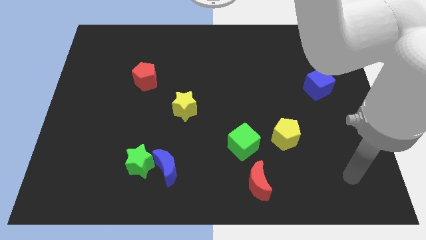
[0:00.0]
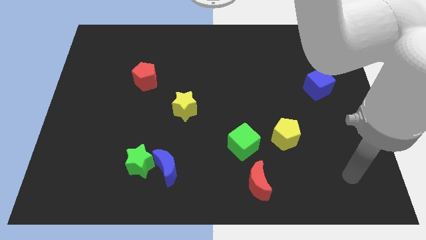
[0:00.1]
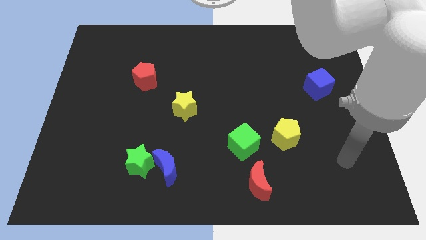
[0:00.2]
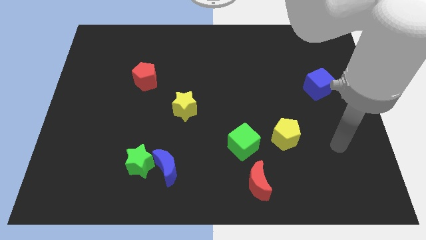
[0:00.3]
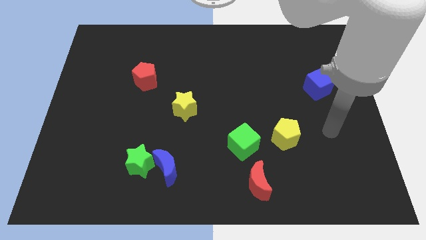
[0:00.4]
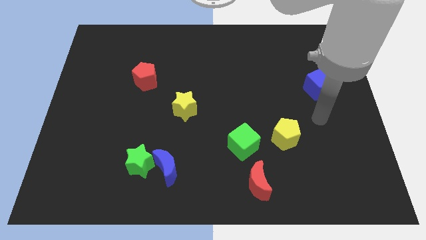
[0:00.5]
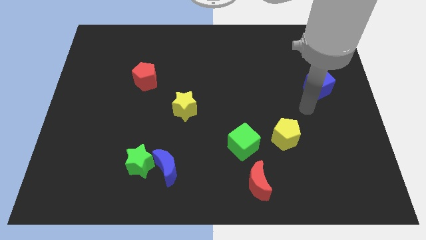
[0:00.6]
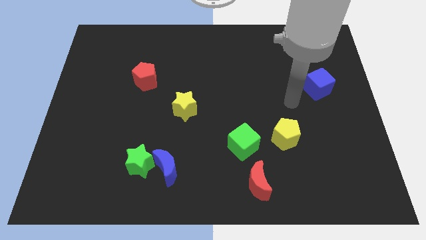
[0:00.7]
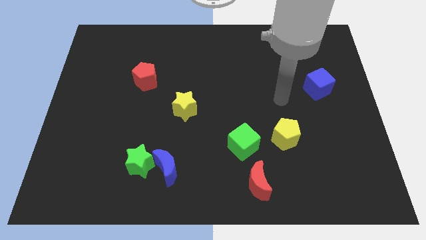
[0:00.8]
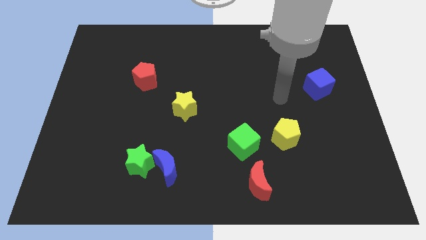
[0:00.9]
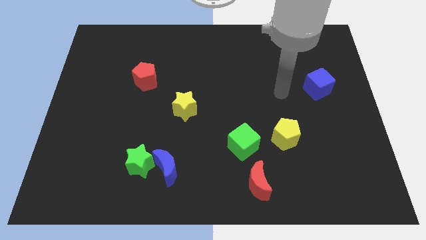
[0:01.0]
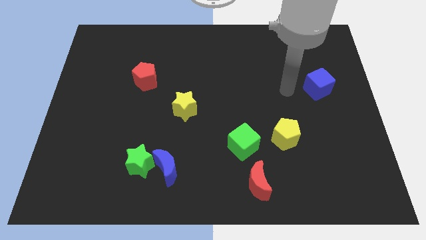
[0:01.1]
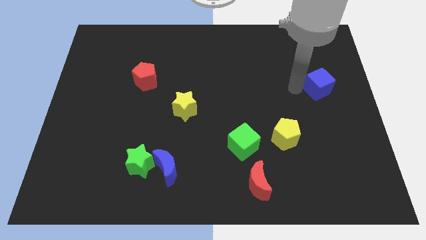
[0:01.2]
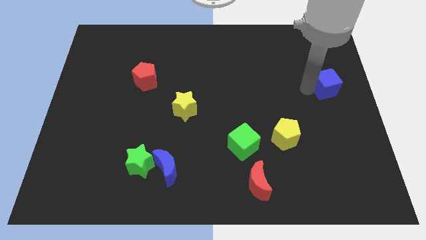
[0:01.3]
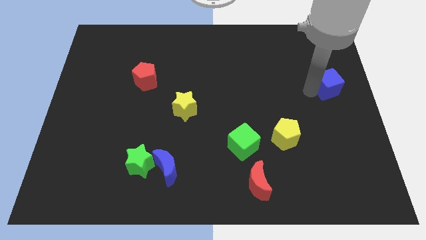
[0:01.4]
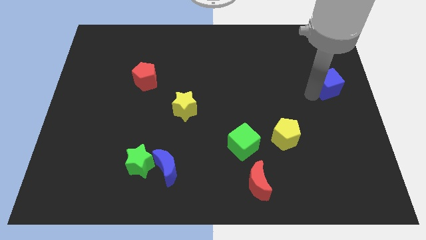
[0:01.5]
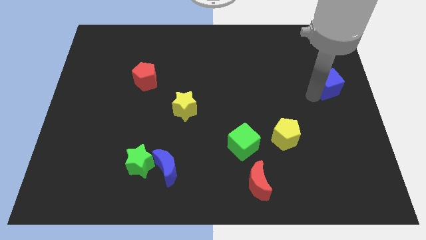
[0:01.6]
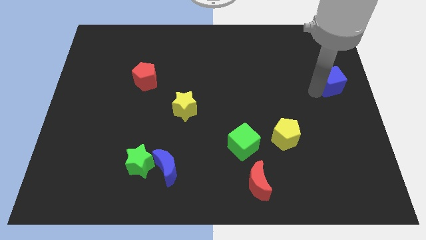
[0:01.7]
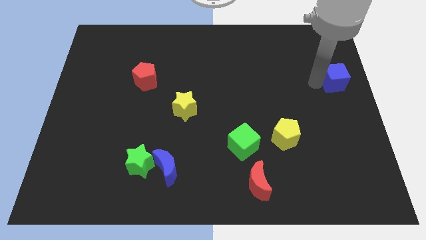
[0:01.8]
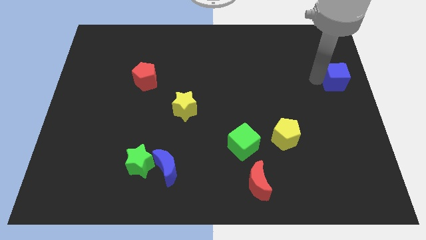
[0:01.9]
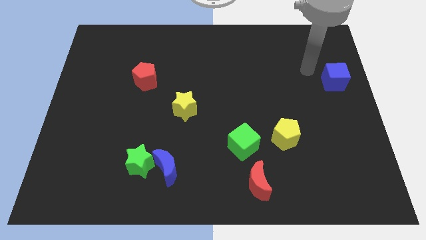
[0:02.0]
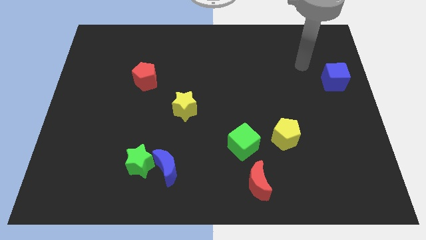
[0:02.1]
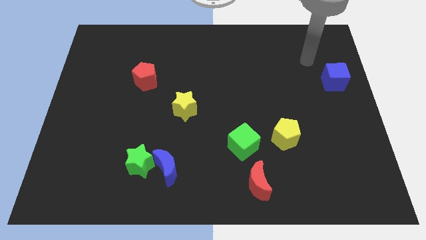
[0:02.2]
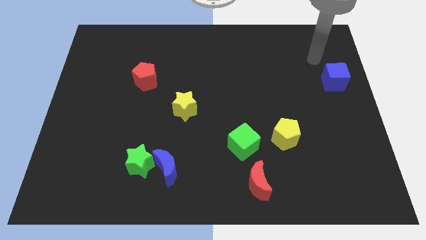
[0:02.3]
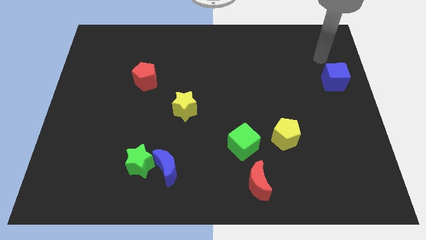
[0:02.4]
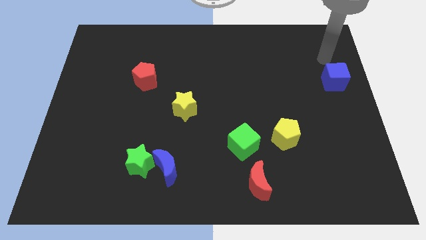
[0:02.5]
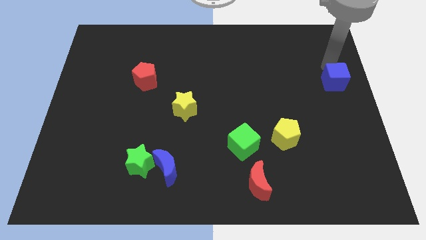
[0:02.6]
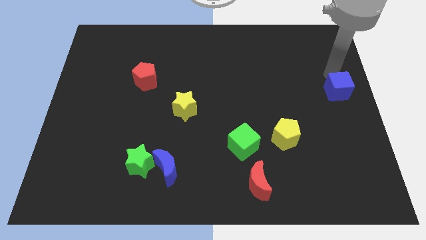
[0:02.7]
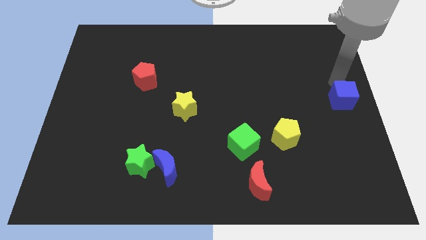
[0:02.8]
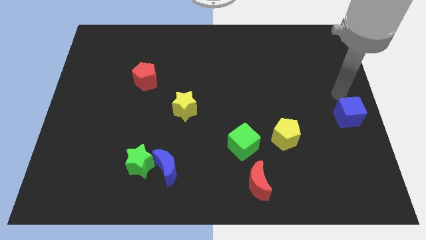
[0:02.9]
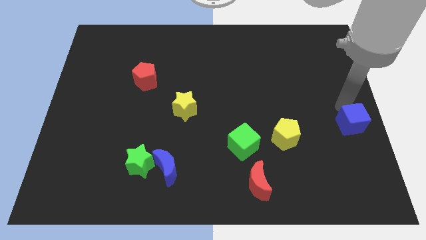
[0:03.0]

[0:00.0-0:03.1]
push the blue cube to the center right of the board

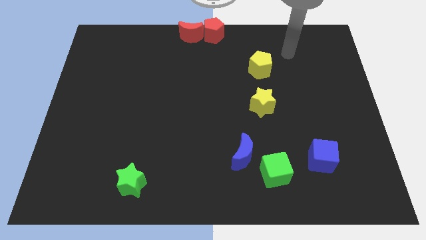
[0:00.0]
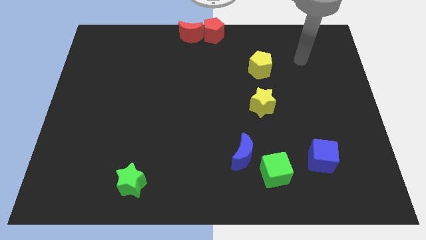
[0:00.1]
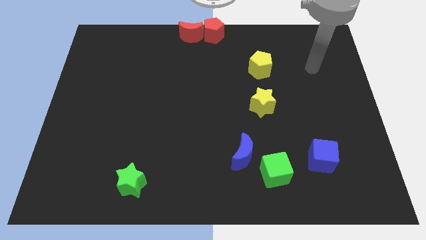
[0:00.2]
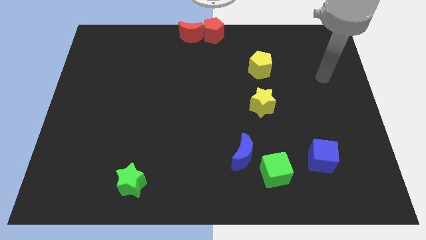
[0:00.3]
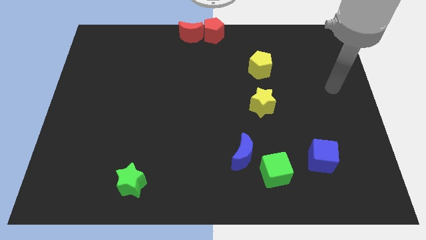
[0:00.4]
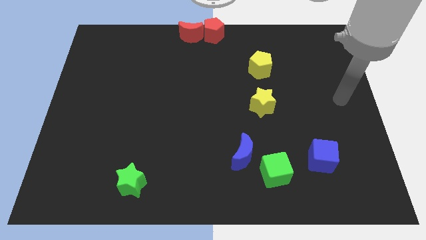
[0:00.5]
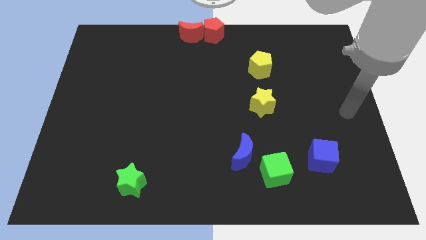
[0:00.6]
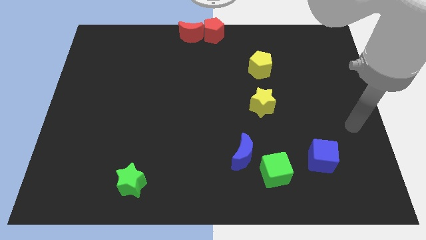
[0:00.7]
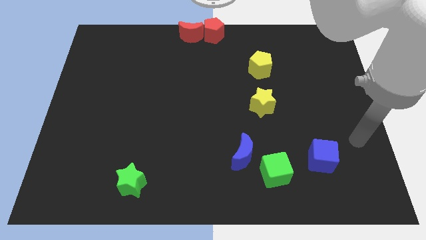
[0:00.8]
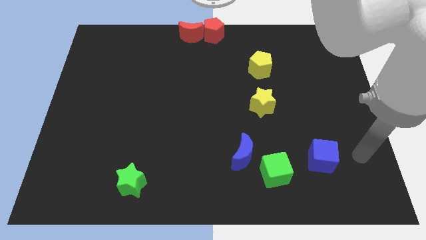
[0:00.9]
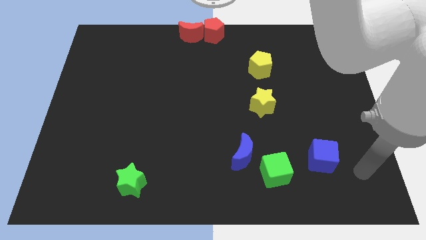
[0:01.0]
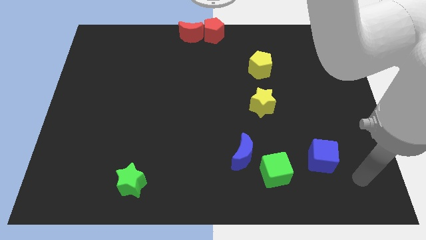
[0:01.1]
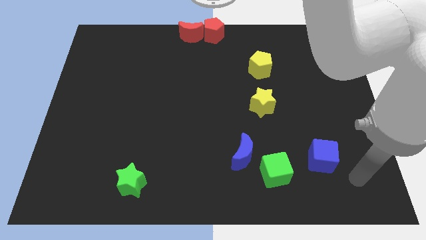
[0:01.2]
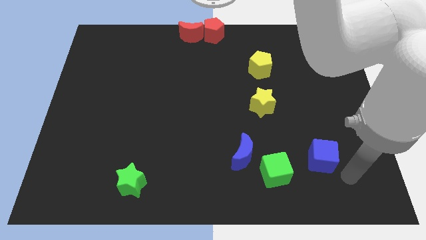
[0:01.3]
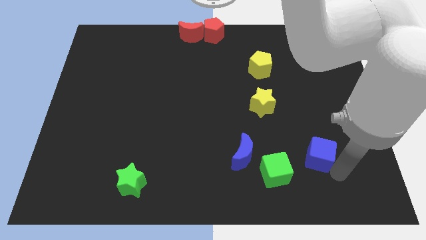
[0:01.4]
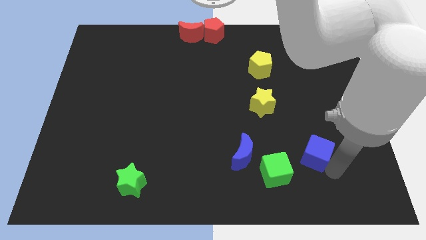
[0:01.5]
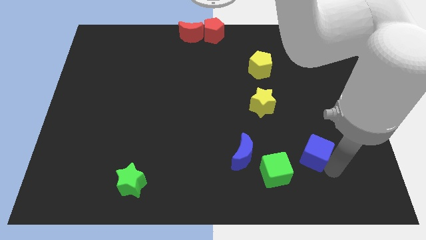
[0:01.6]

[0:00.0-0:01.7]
point your arm right to blue cube

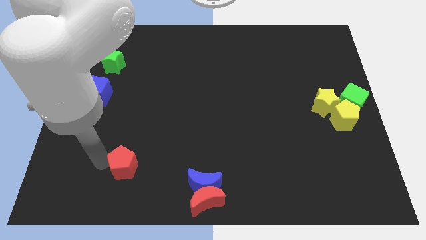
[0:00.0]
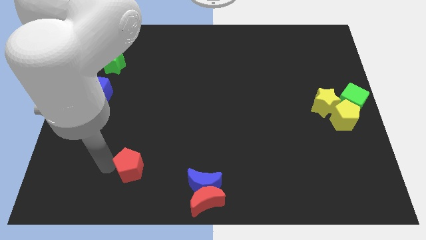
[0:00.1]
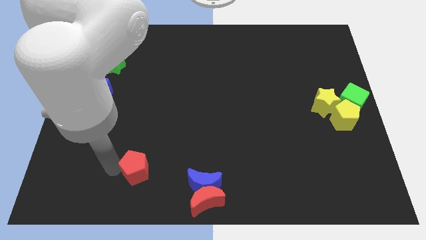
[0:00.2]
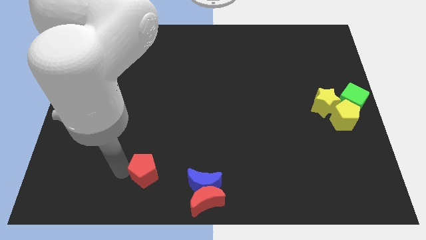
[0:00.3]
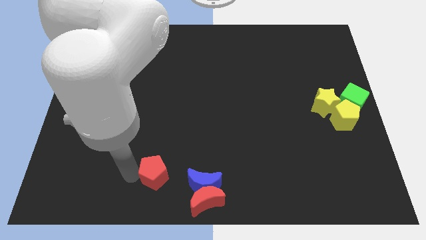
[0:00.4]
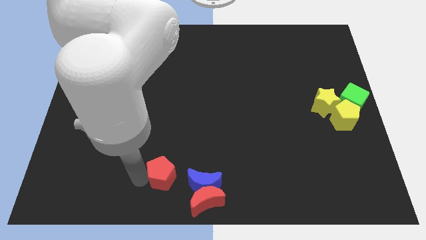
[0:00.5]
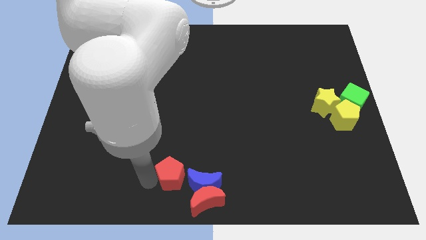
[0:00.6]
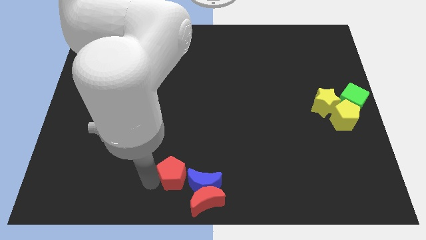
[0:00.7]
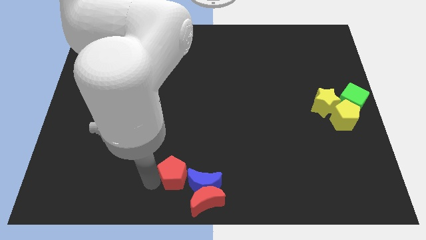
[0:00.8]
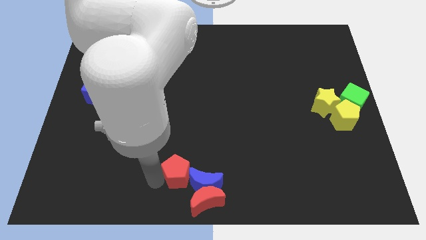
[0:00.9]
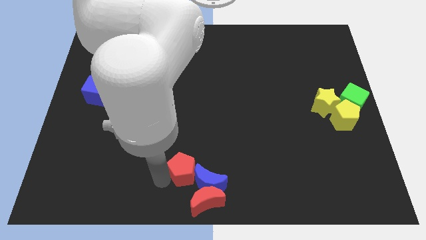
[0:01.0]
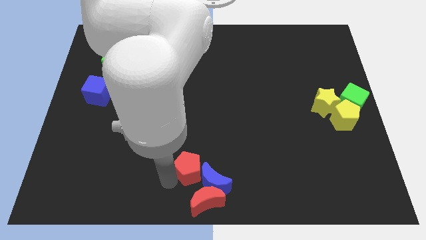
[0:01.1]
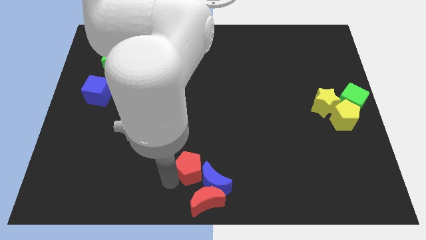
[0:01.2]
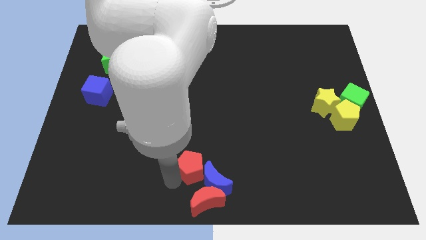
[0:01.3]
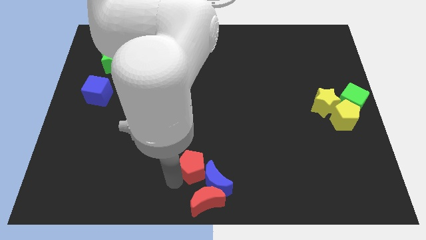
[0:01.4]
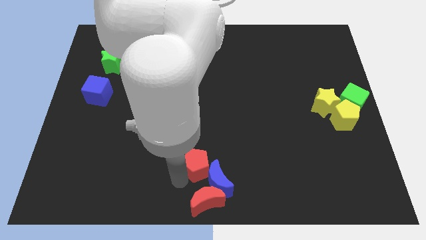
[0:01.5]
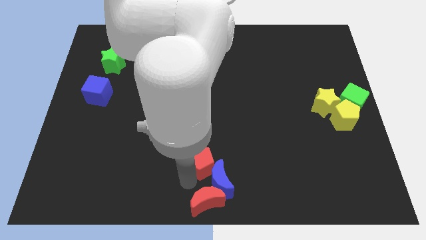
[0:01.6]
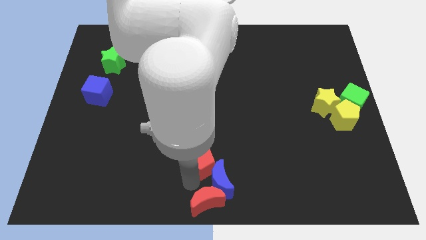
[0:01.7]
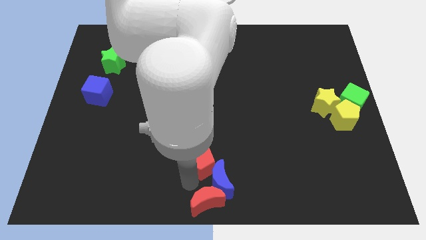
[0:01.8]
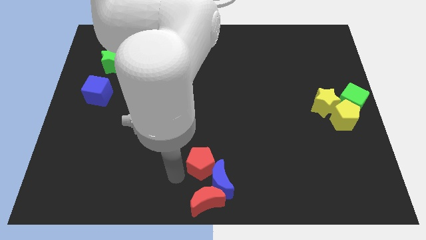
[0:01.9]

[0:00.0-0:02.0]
move the red pentagon above to the blue crescent

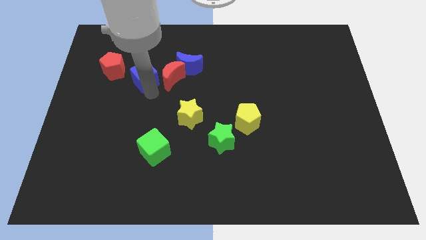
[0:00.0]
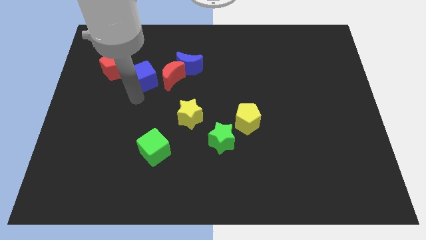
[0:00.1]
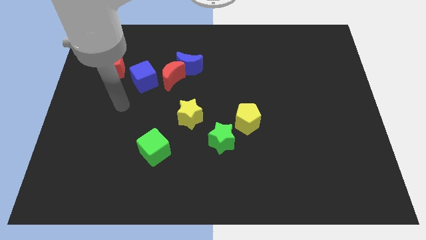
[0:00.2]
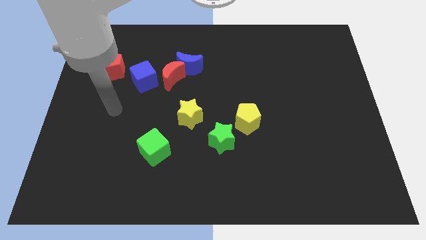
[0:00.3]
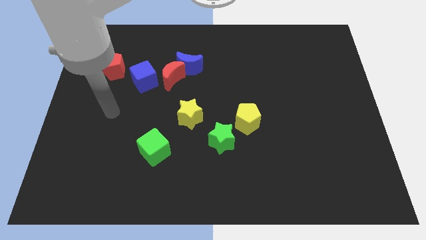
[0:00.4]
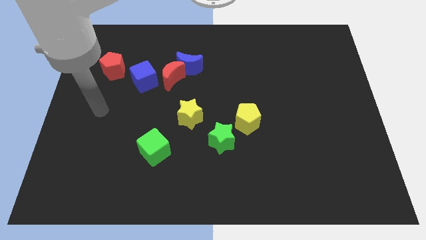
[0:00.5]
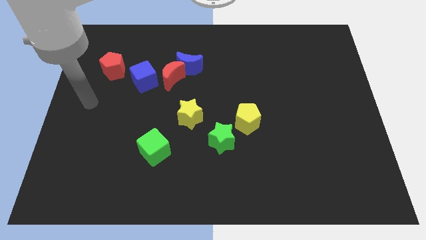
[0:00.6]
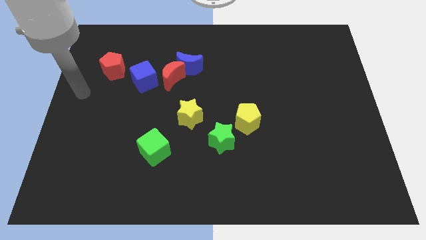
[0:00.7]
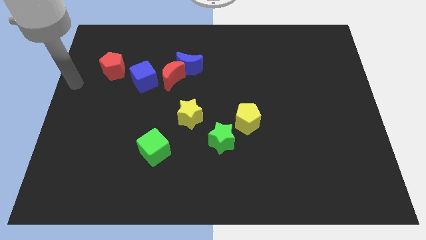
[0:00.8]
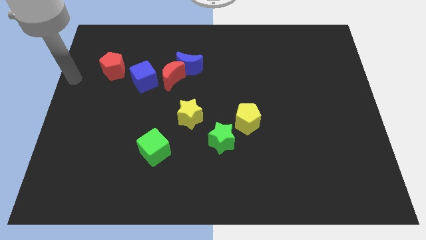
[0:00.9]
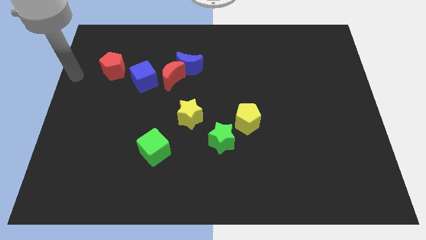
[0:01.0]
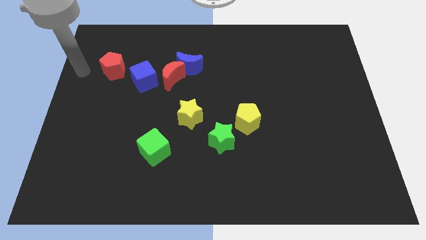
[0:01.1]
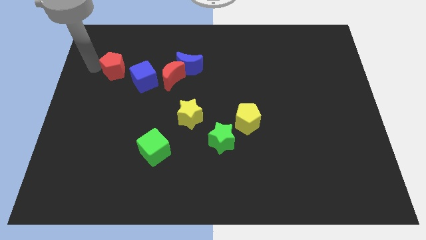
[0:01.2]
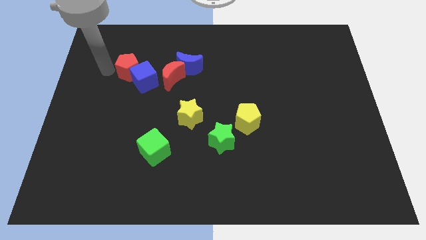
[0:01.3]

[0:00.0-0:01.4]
slightly push the red pentagon towards the blue cube

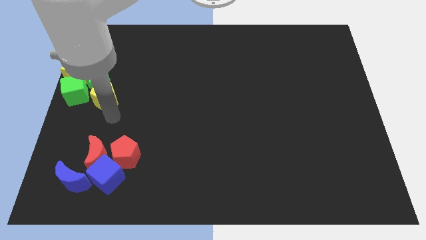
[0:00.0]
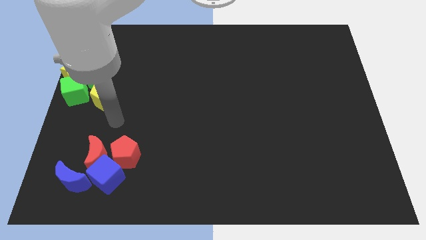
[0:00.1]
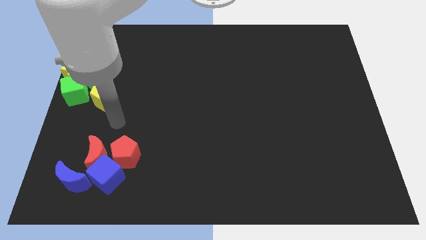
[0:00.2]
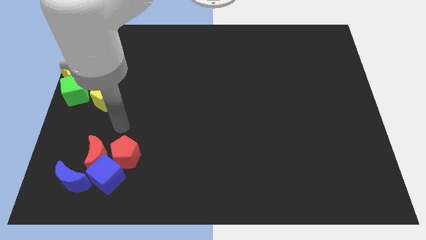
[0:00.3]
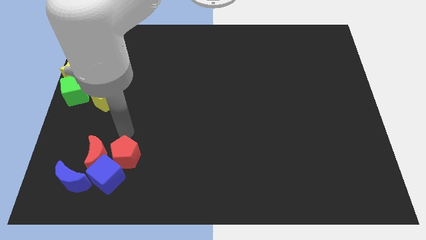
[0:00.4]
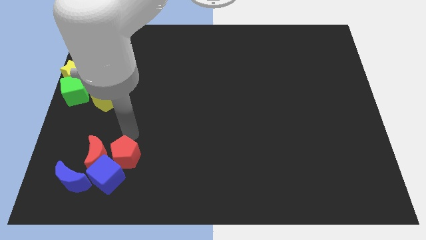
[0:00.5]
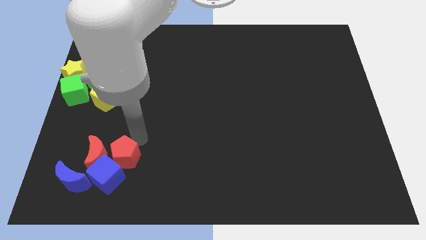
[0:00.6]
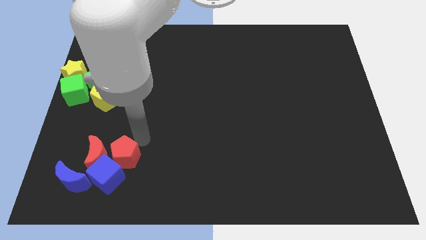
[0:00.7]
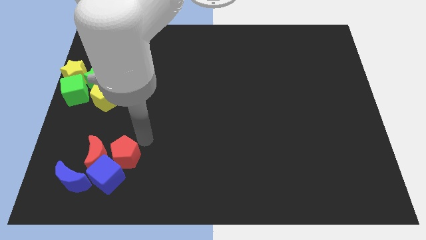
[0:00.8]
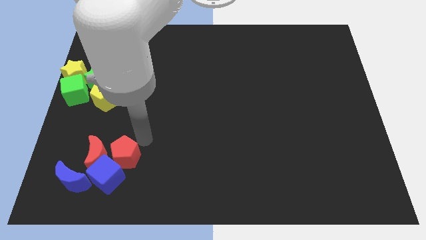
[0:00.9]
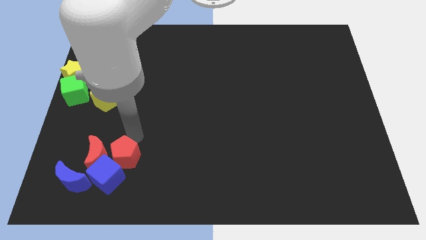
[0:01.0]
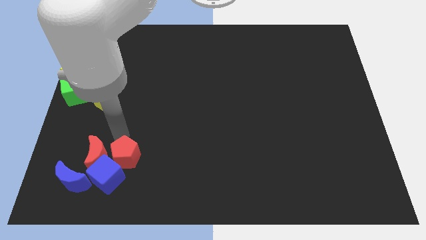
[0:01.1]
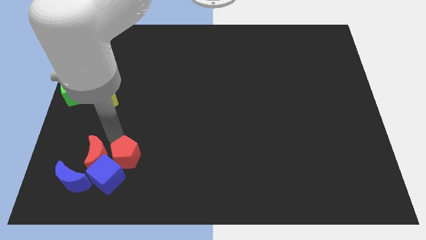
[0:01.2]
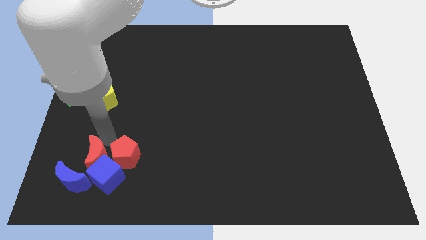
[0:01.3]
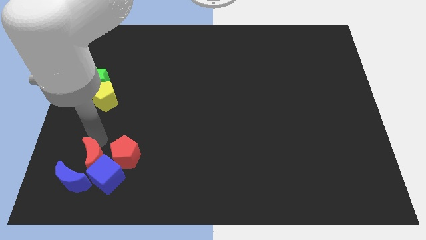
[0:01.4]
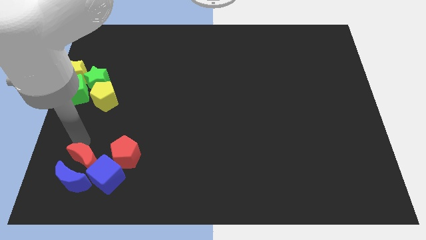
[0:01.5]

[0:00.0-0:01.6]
slightly move the red moon towards the blue crescent
